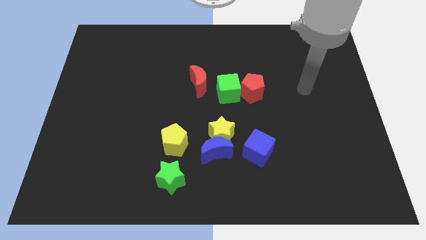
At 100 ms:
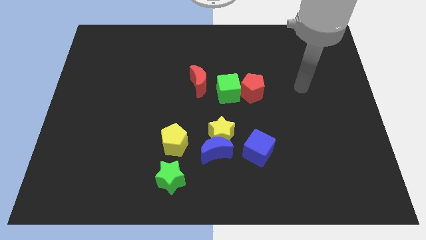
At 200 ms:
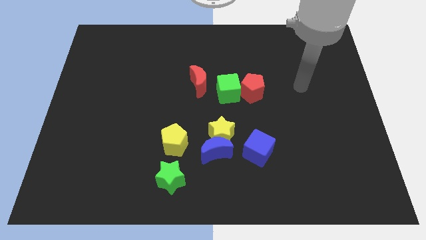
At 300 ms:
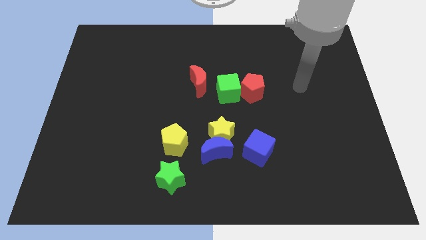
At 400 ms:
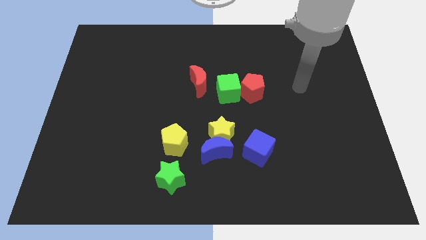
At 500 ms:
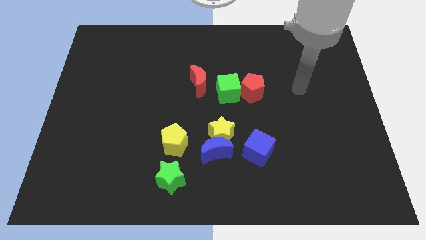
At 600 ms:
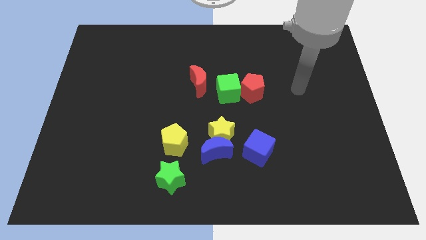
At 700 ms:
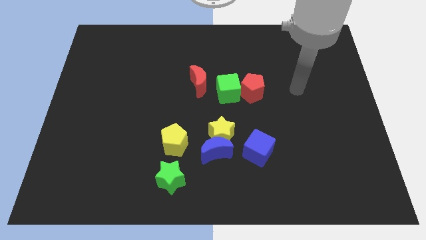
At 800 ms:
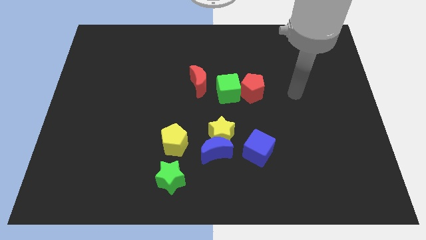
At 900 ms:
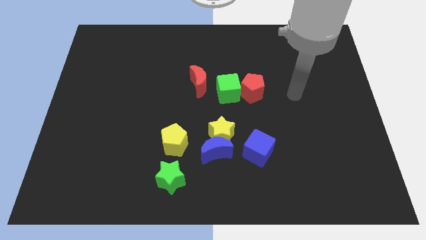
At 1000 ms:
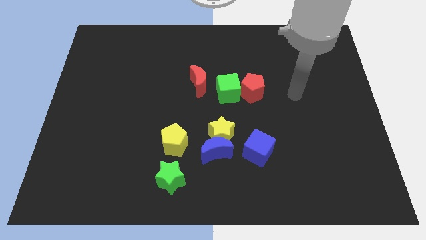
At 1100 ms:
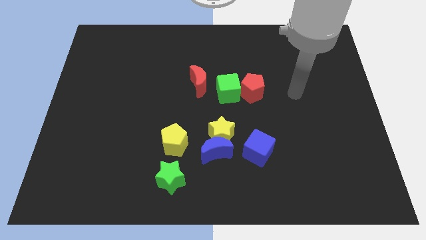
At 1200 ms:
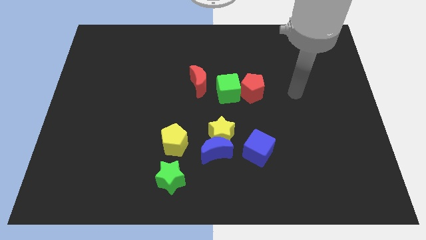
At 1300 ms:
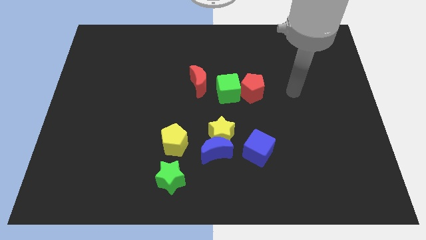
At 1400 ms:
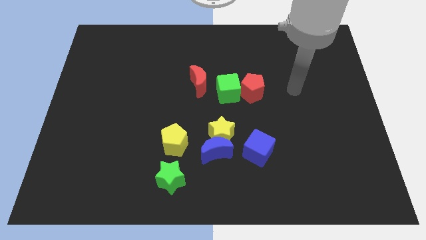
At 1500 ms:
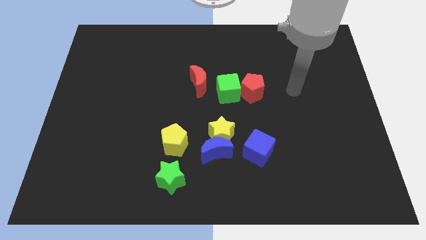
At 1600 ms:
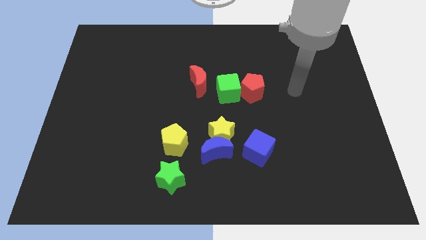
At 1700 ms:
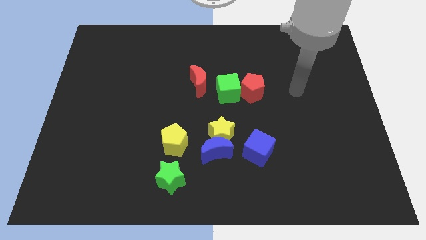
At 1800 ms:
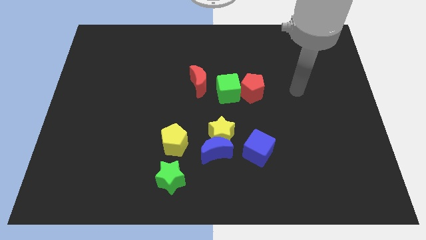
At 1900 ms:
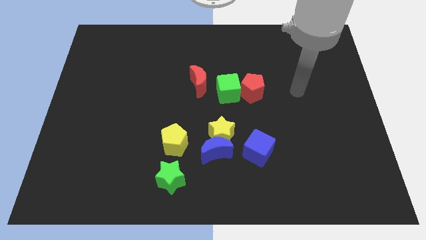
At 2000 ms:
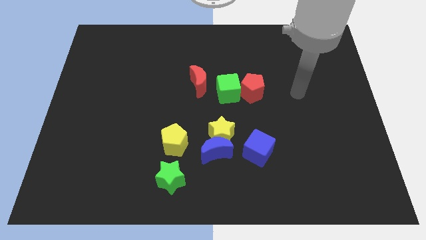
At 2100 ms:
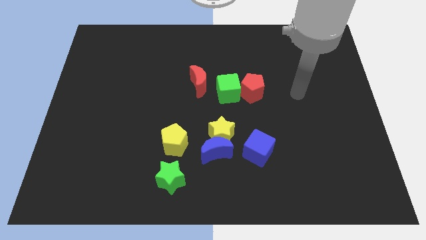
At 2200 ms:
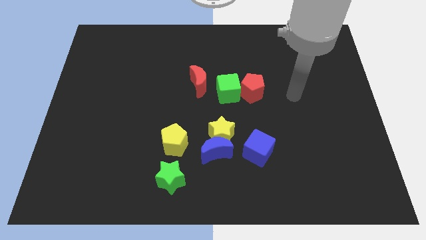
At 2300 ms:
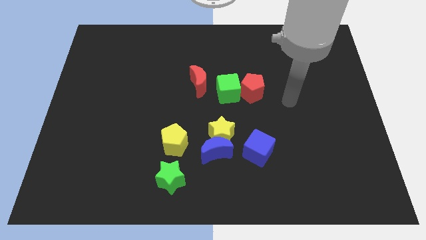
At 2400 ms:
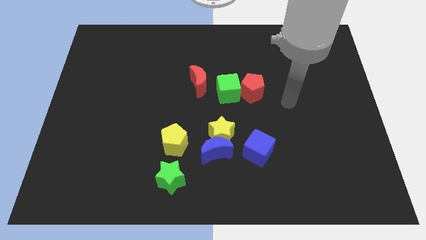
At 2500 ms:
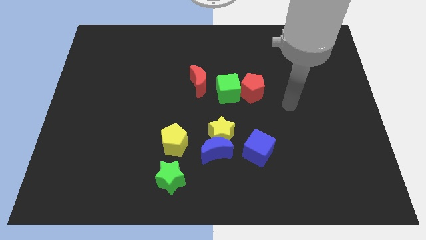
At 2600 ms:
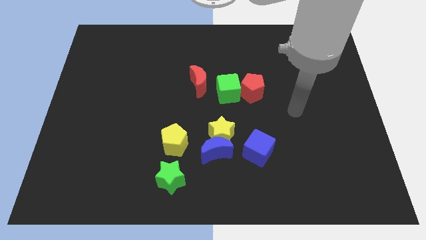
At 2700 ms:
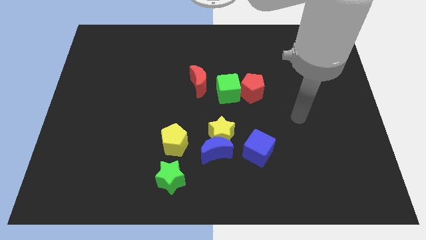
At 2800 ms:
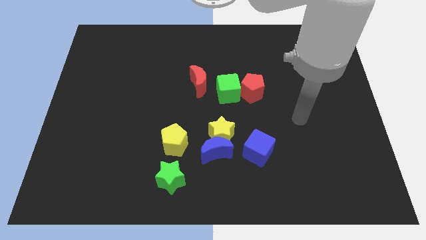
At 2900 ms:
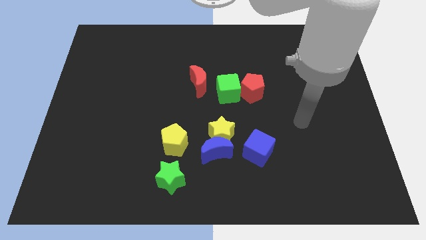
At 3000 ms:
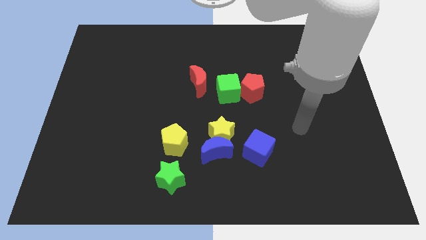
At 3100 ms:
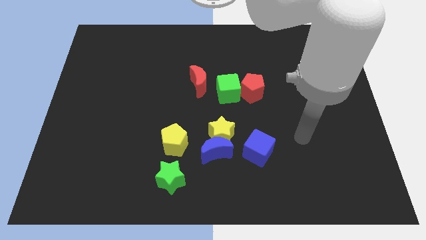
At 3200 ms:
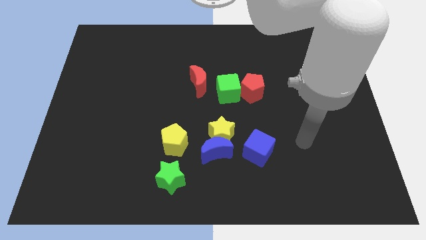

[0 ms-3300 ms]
move your arm to the right of blue cube

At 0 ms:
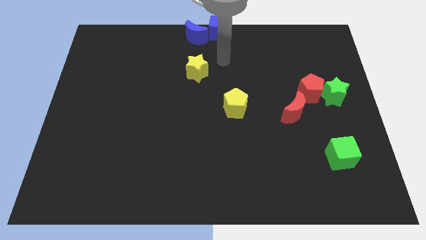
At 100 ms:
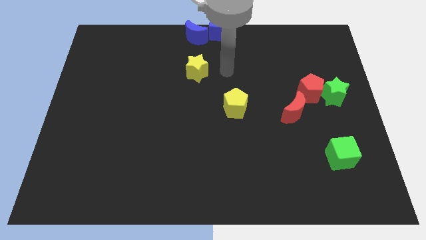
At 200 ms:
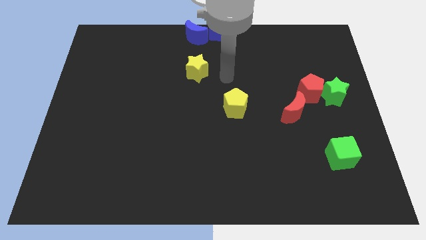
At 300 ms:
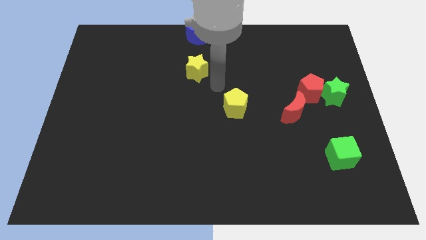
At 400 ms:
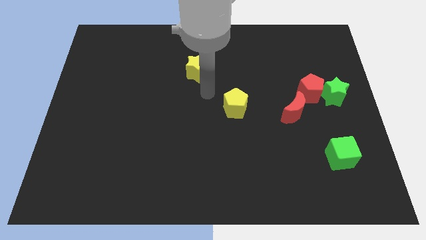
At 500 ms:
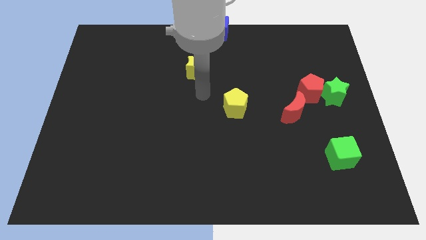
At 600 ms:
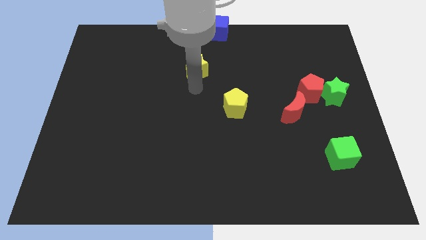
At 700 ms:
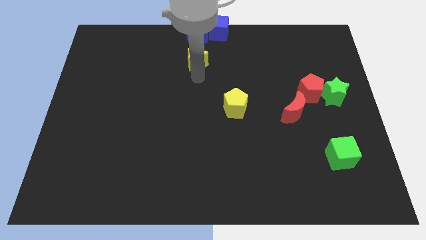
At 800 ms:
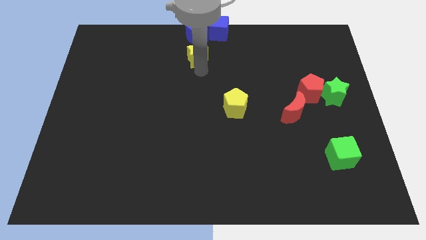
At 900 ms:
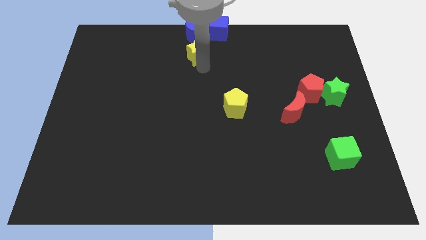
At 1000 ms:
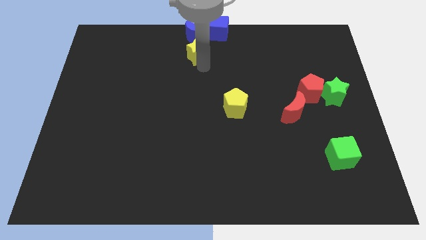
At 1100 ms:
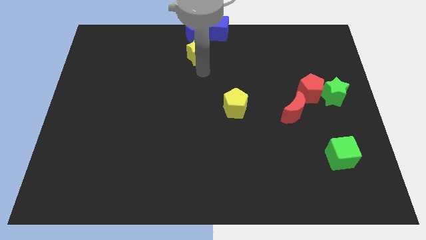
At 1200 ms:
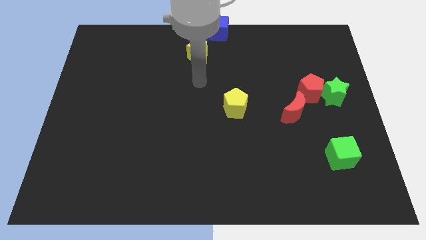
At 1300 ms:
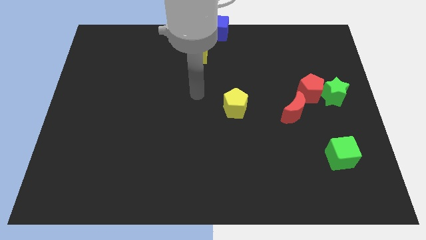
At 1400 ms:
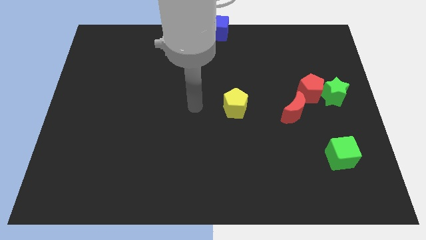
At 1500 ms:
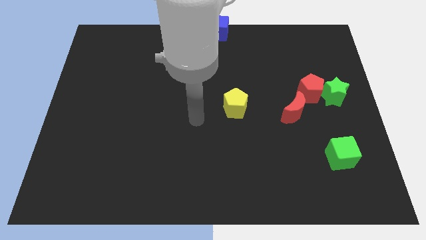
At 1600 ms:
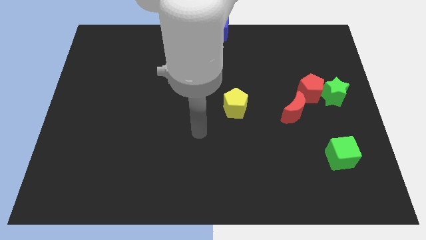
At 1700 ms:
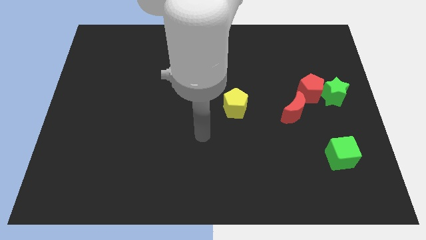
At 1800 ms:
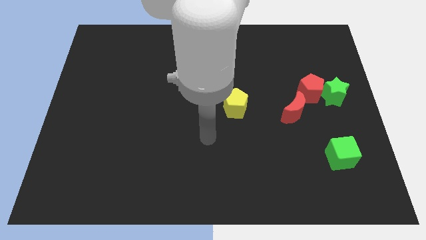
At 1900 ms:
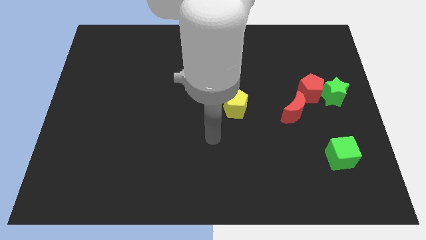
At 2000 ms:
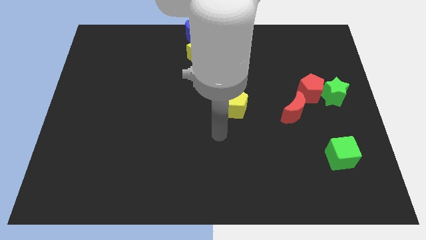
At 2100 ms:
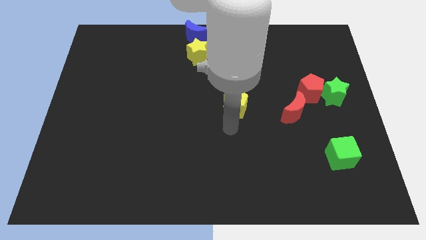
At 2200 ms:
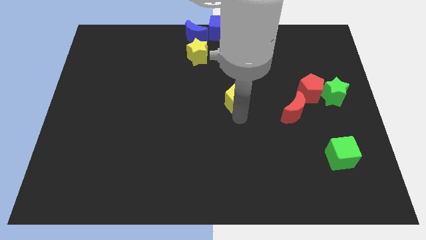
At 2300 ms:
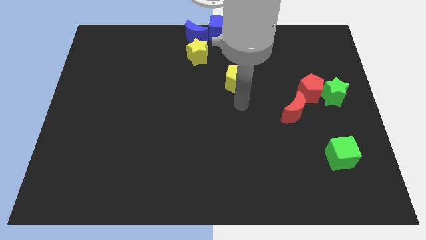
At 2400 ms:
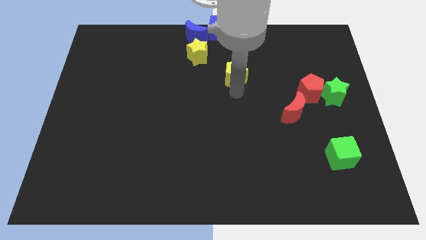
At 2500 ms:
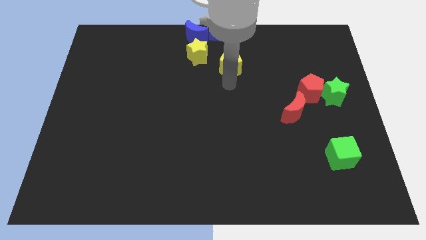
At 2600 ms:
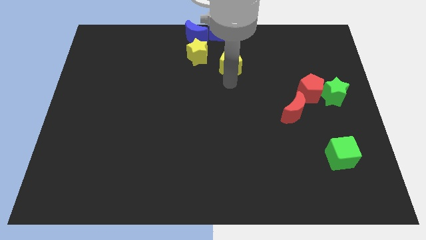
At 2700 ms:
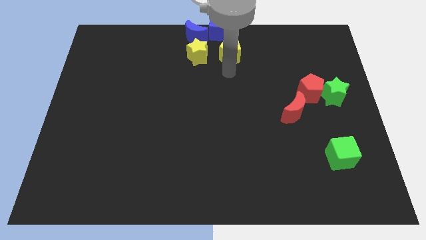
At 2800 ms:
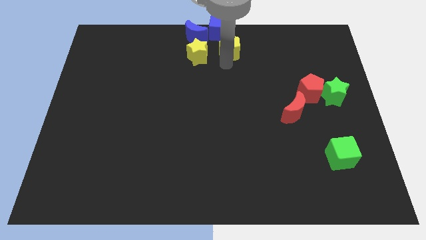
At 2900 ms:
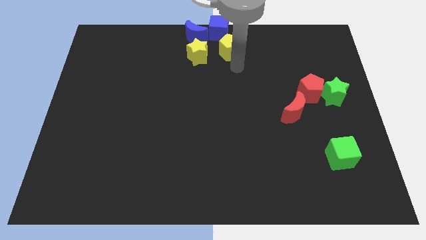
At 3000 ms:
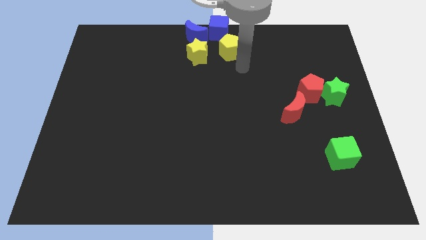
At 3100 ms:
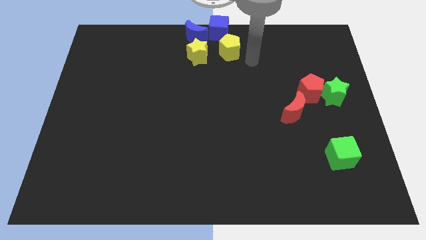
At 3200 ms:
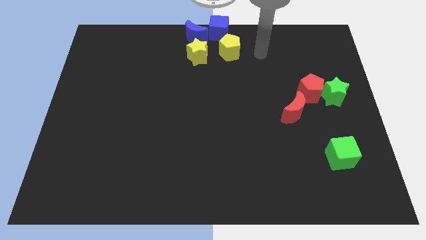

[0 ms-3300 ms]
move the yellow blocks below the blue blocks

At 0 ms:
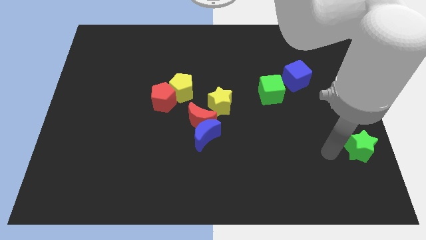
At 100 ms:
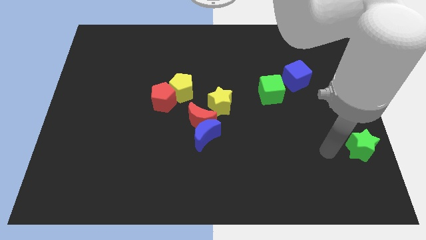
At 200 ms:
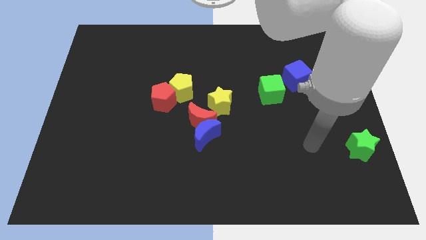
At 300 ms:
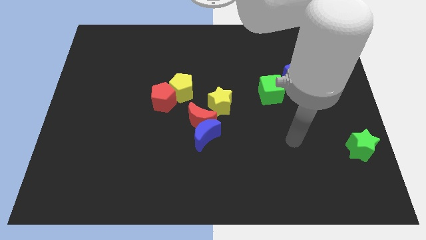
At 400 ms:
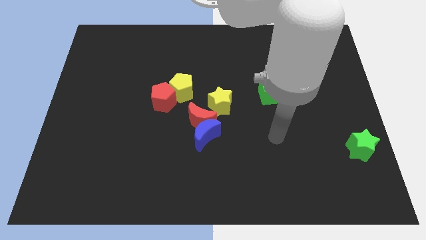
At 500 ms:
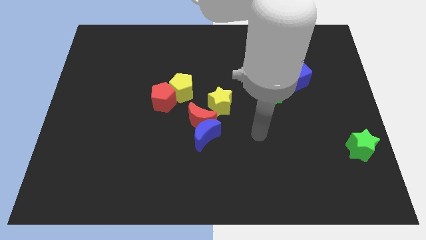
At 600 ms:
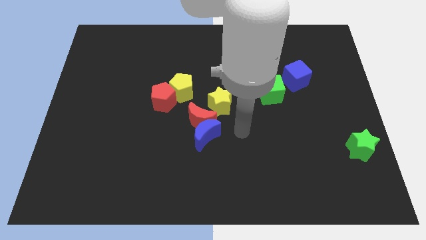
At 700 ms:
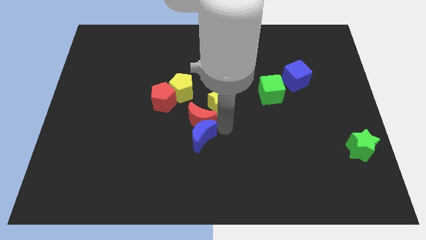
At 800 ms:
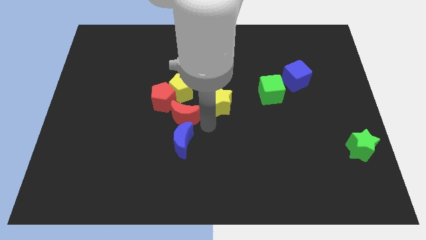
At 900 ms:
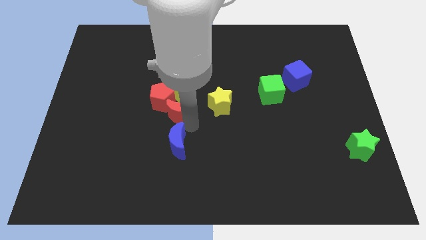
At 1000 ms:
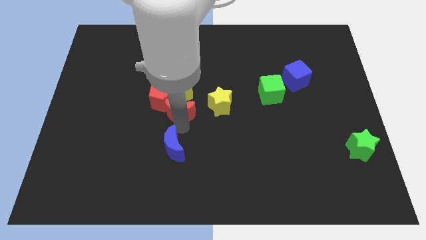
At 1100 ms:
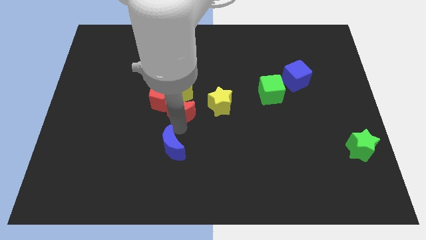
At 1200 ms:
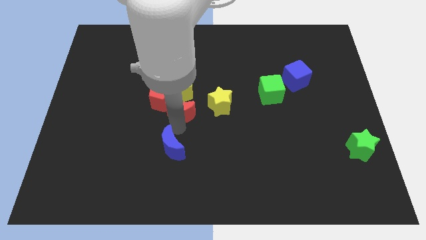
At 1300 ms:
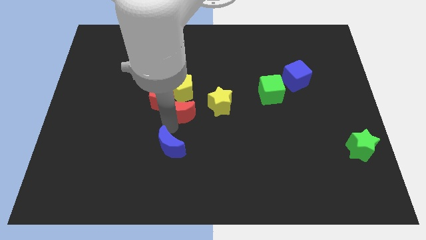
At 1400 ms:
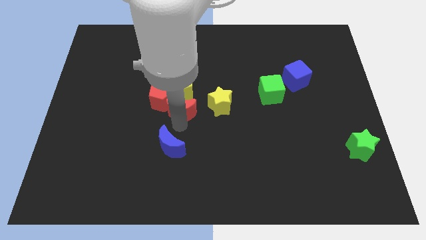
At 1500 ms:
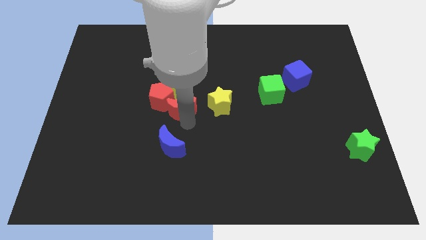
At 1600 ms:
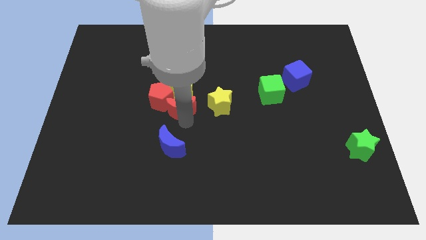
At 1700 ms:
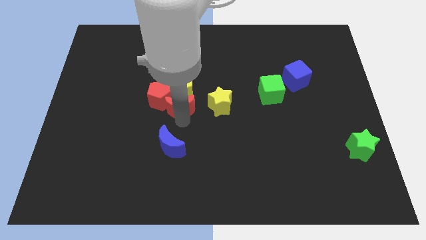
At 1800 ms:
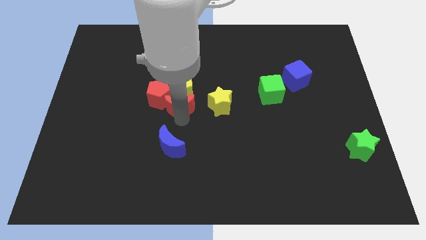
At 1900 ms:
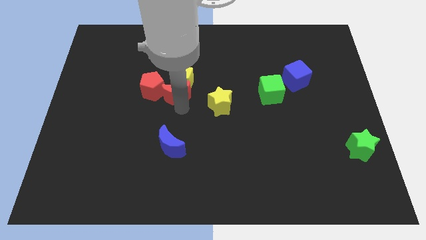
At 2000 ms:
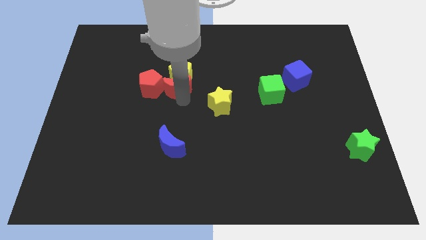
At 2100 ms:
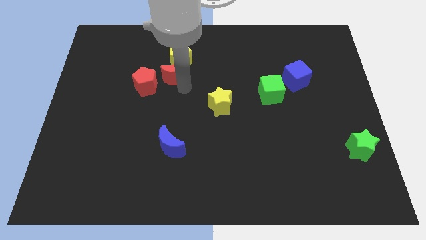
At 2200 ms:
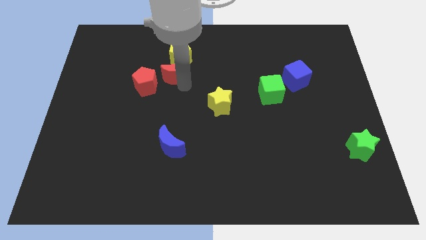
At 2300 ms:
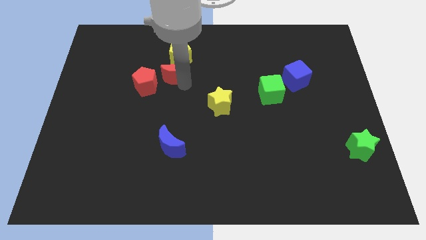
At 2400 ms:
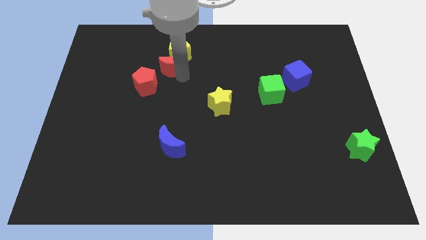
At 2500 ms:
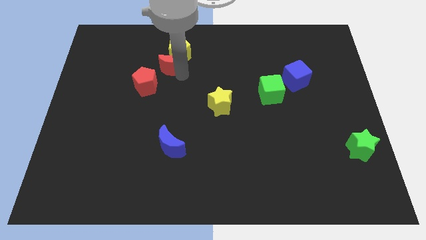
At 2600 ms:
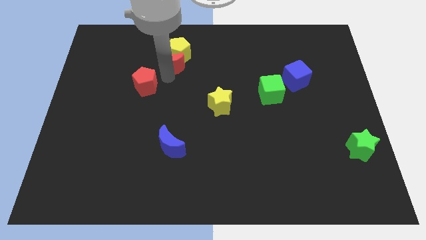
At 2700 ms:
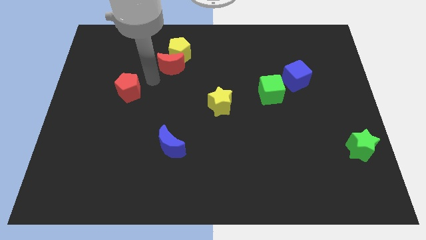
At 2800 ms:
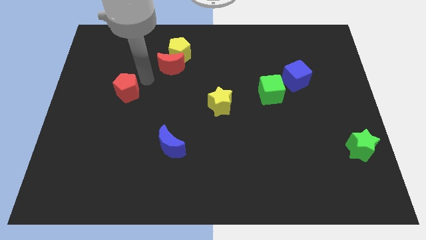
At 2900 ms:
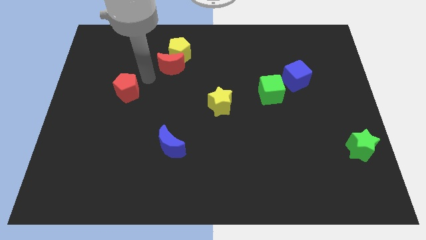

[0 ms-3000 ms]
push the red crescent into the yellow pentagon
